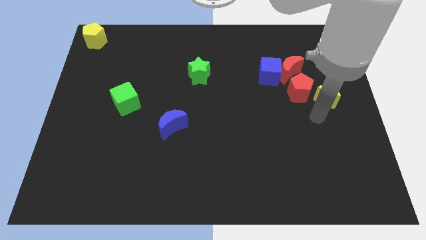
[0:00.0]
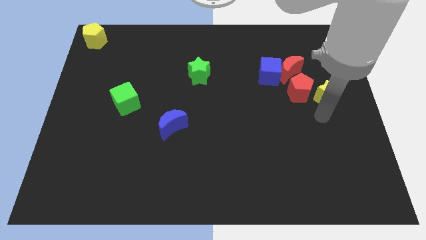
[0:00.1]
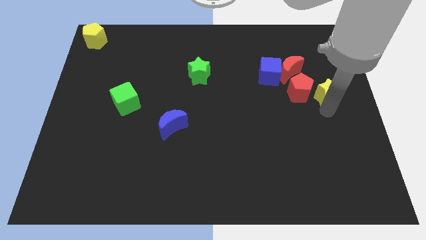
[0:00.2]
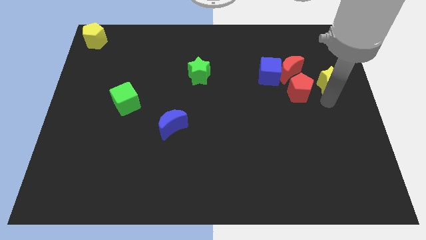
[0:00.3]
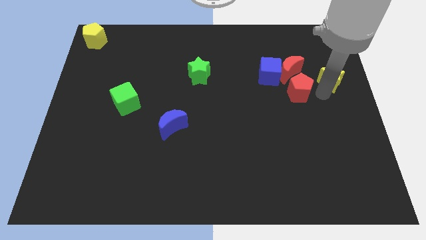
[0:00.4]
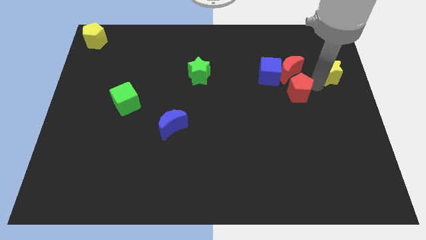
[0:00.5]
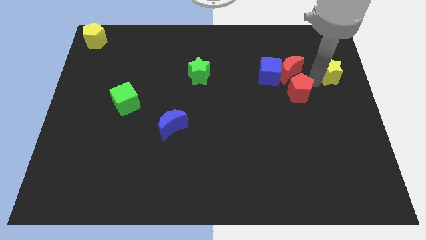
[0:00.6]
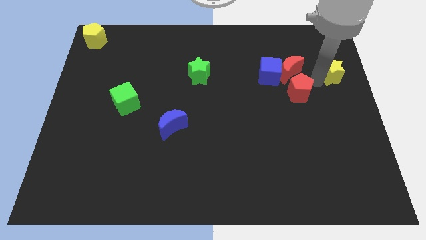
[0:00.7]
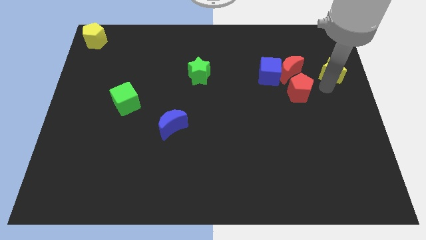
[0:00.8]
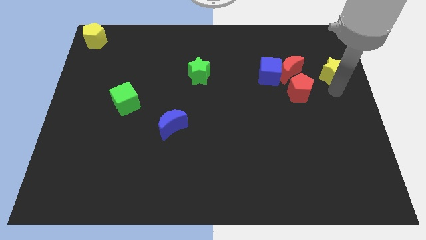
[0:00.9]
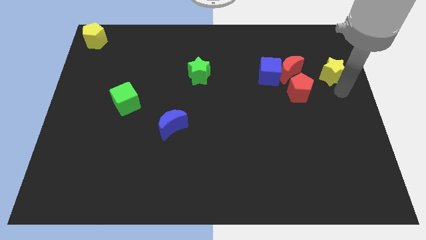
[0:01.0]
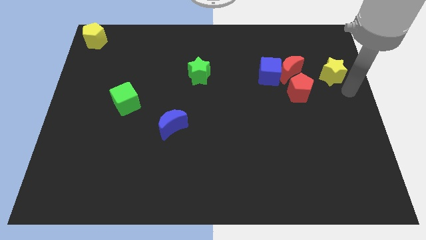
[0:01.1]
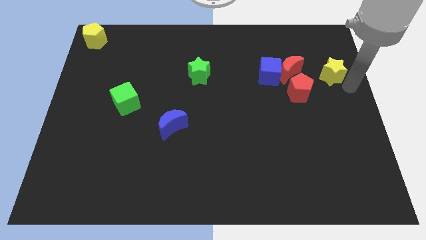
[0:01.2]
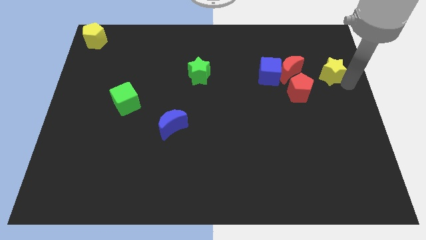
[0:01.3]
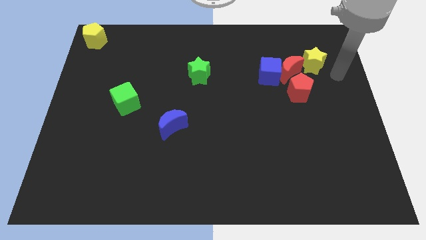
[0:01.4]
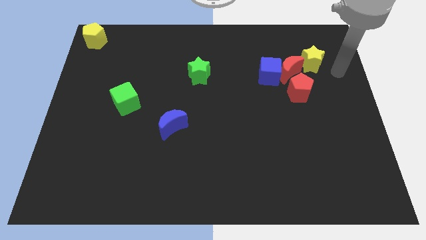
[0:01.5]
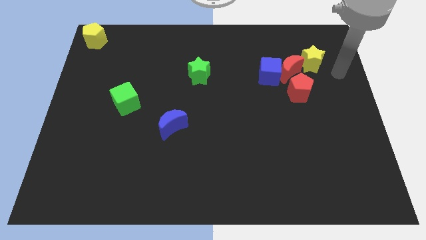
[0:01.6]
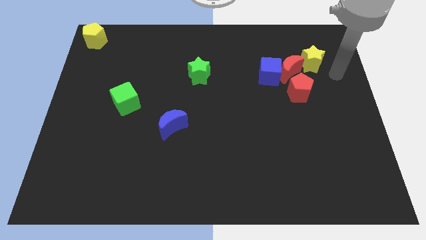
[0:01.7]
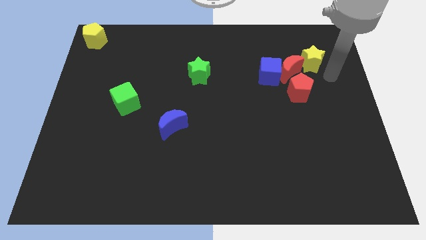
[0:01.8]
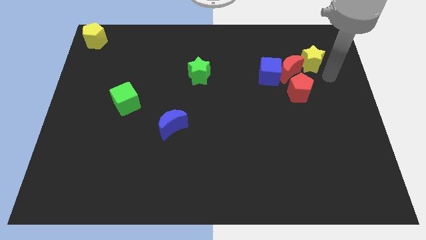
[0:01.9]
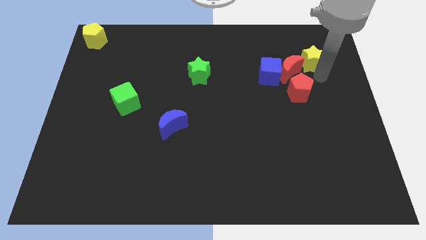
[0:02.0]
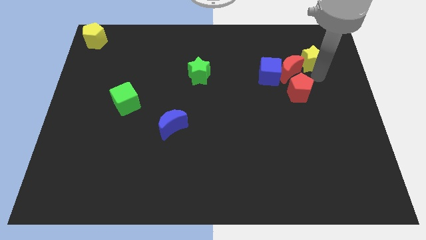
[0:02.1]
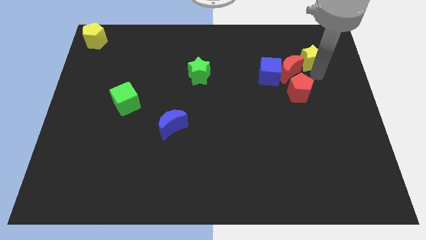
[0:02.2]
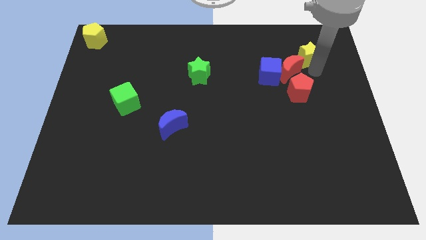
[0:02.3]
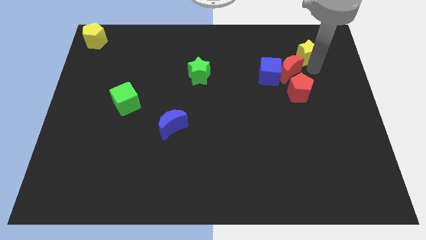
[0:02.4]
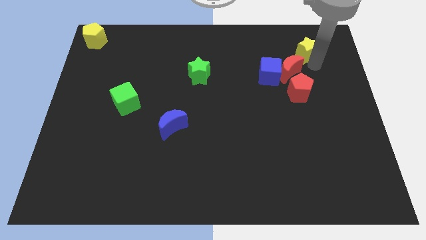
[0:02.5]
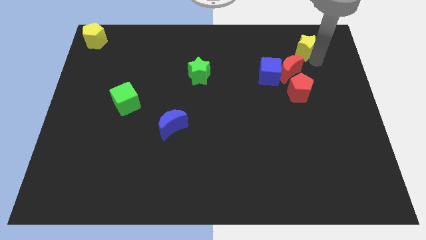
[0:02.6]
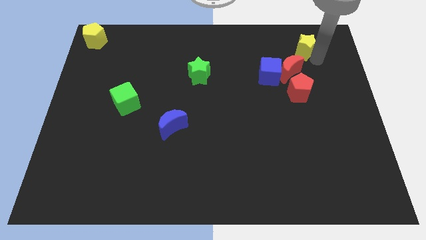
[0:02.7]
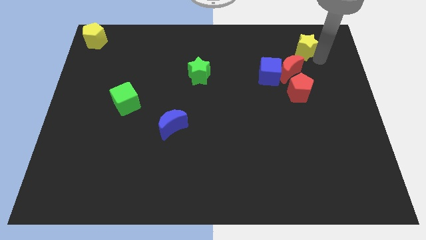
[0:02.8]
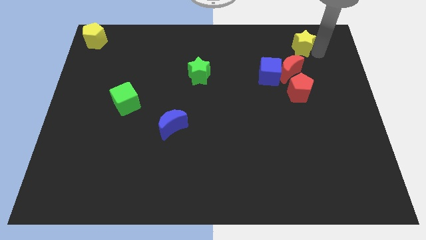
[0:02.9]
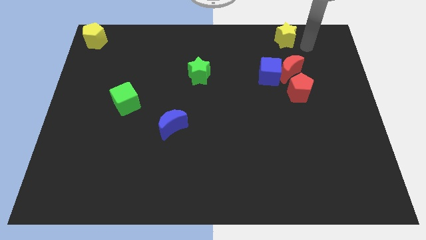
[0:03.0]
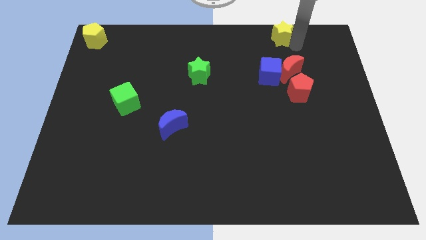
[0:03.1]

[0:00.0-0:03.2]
place the yellow star above the red moon

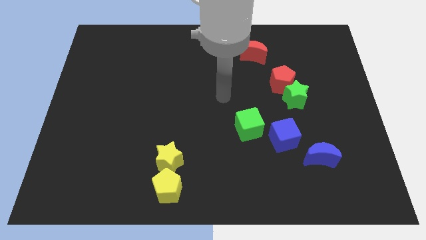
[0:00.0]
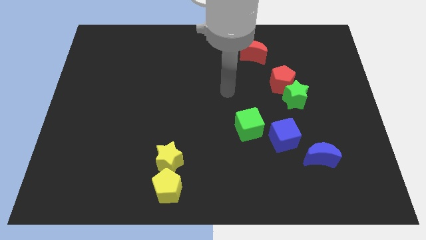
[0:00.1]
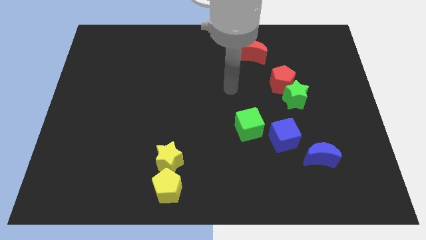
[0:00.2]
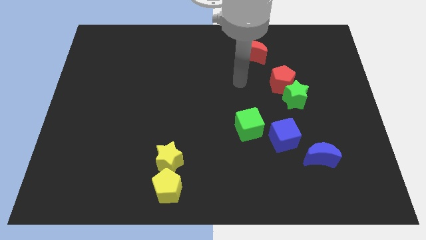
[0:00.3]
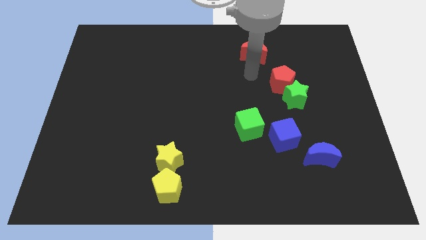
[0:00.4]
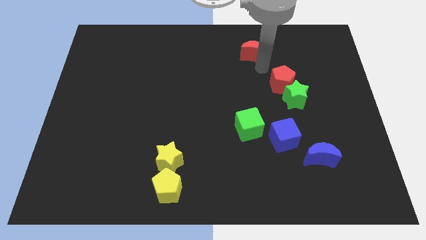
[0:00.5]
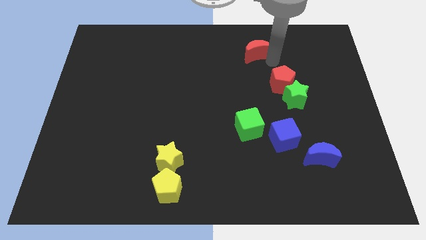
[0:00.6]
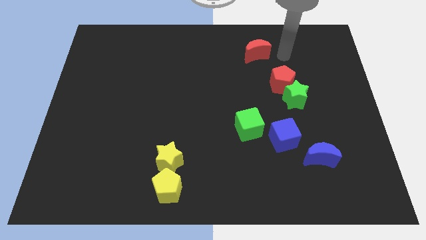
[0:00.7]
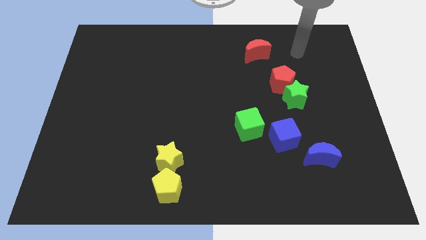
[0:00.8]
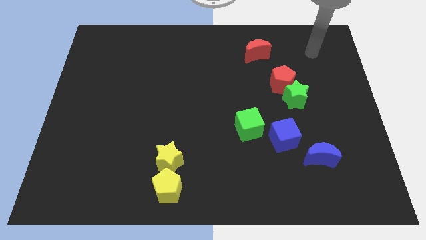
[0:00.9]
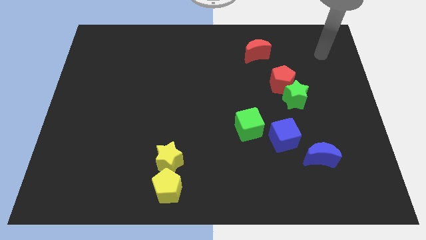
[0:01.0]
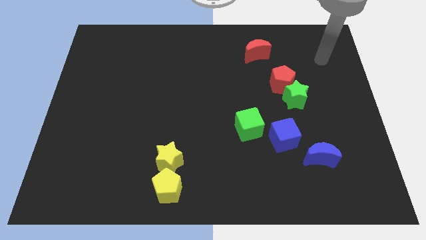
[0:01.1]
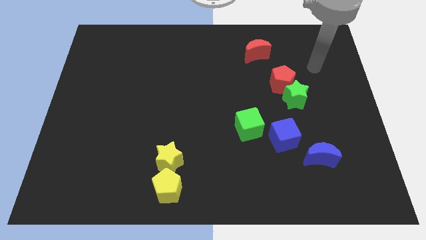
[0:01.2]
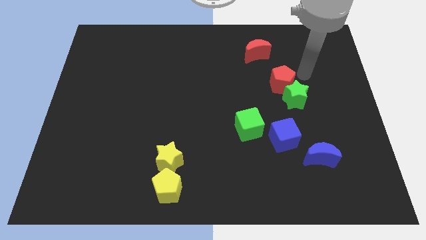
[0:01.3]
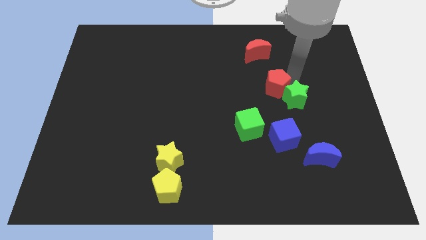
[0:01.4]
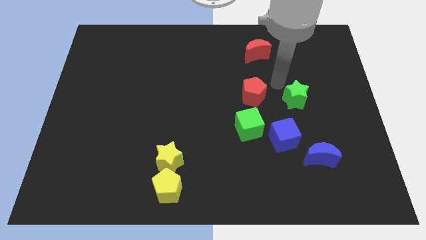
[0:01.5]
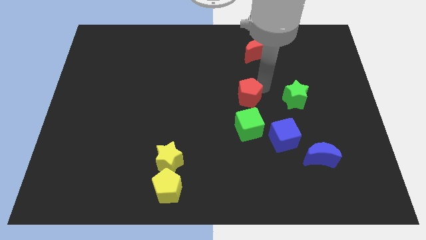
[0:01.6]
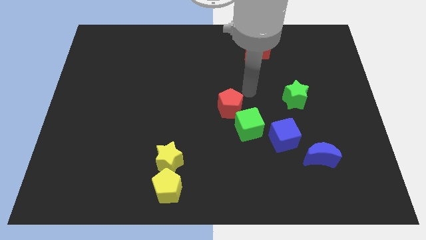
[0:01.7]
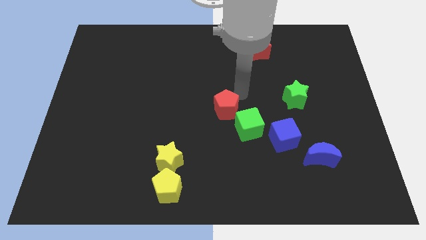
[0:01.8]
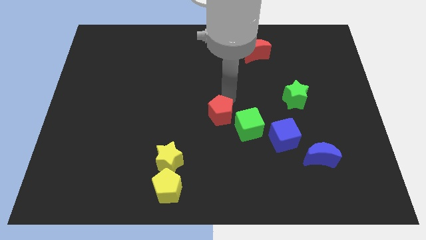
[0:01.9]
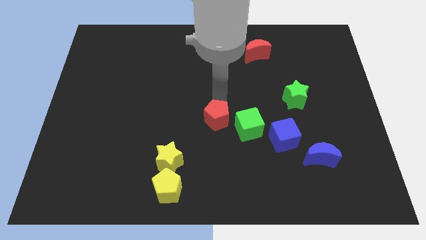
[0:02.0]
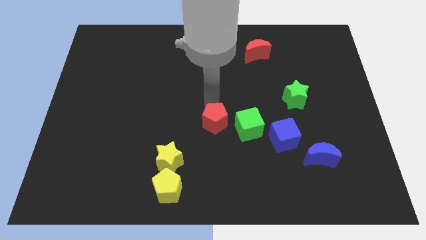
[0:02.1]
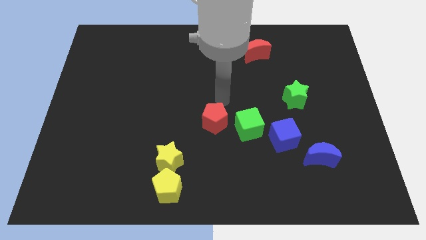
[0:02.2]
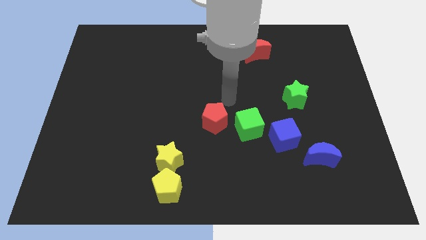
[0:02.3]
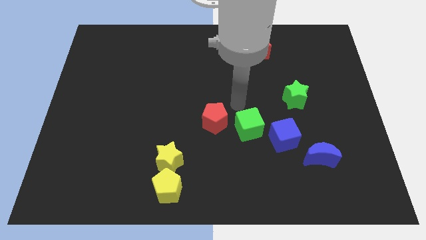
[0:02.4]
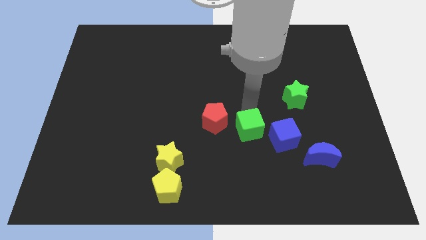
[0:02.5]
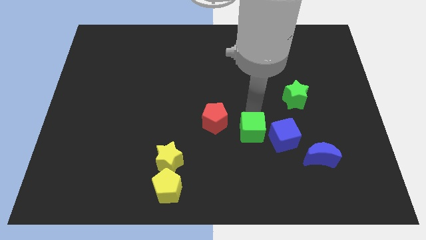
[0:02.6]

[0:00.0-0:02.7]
separate the red pentagon from the green star

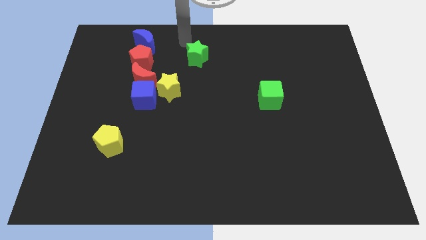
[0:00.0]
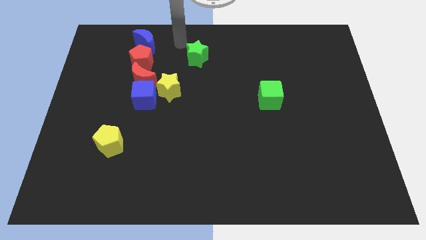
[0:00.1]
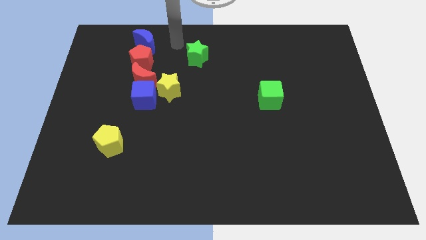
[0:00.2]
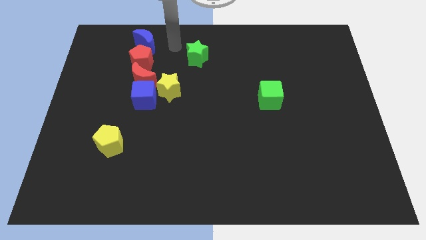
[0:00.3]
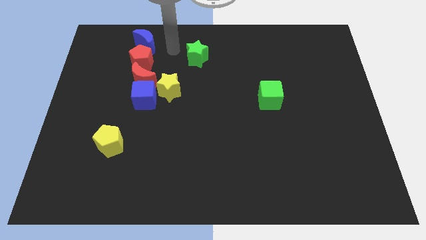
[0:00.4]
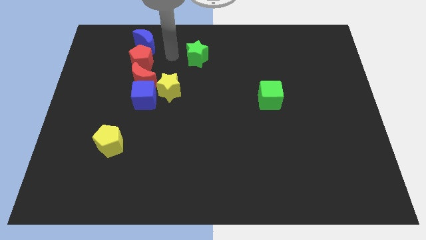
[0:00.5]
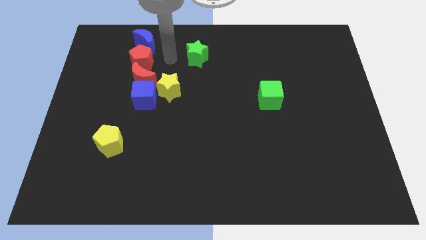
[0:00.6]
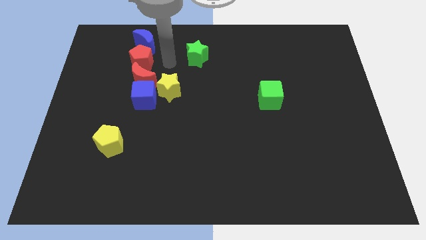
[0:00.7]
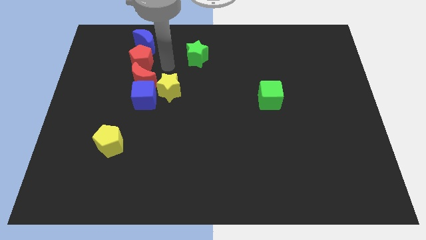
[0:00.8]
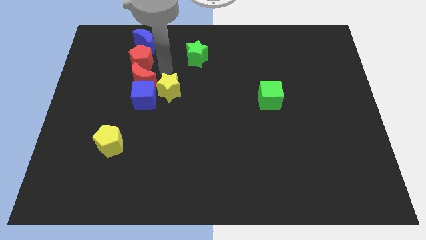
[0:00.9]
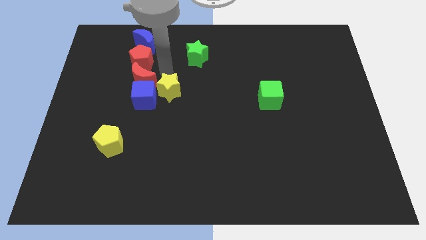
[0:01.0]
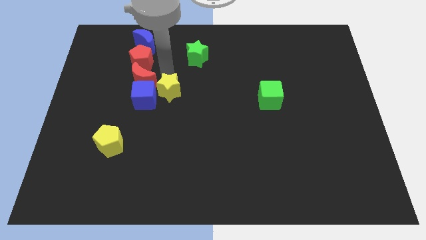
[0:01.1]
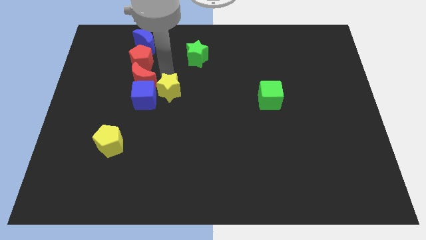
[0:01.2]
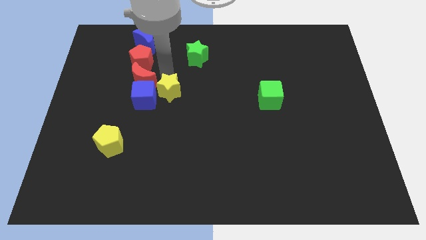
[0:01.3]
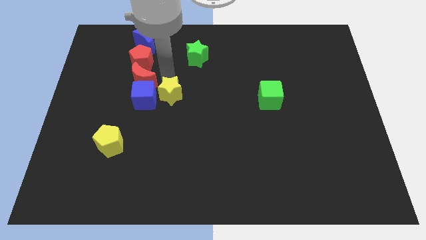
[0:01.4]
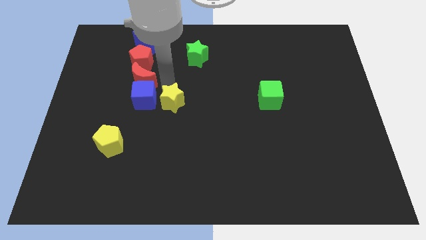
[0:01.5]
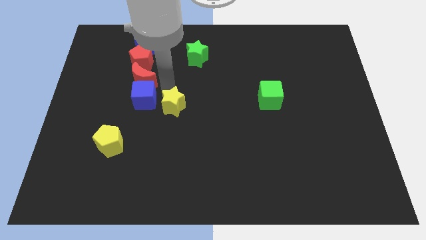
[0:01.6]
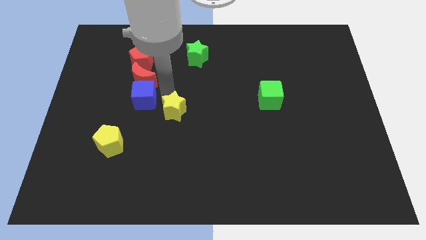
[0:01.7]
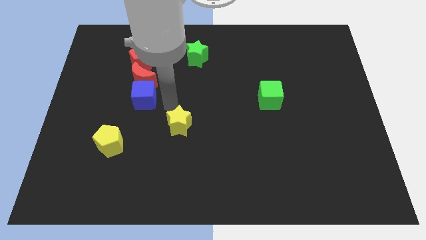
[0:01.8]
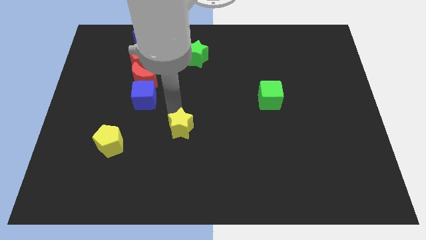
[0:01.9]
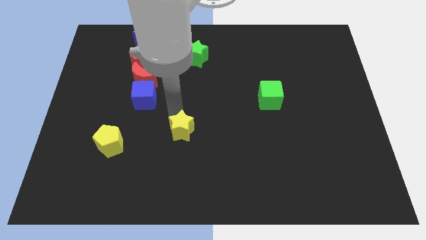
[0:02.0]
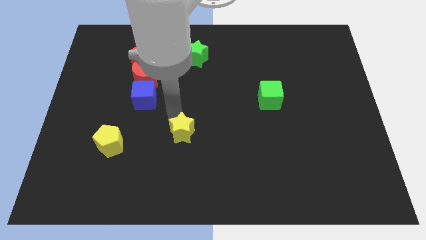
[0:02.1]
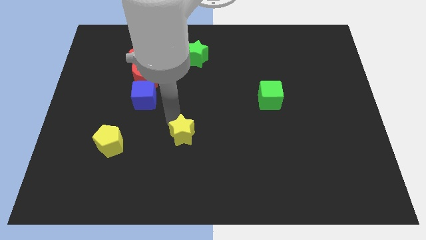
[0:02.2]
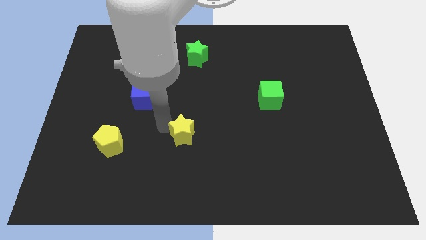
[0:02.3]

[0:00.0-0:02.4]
move the yellow star towards the bottom

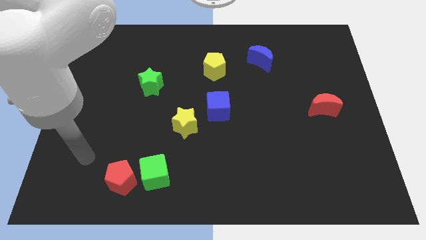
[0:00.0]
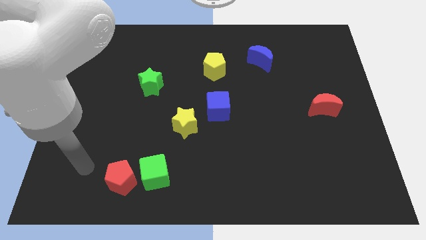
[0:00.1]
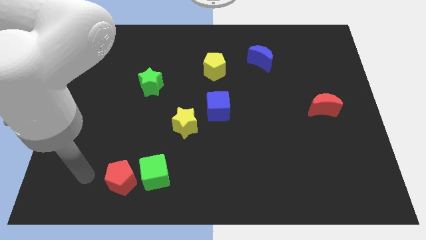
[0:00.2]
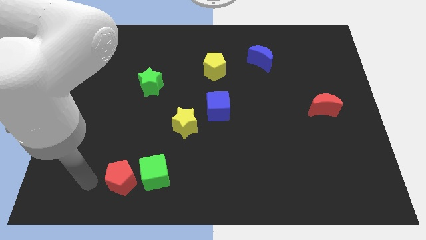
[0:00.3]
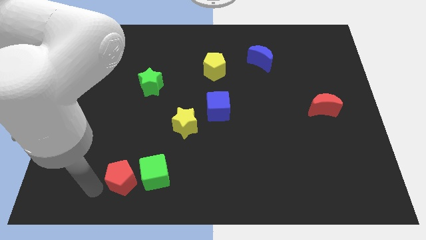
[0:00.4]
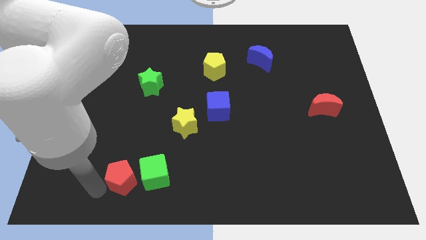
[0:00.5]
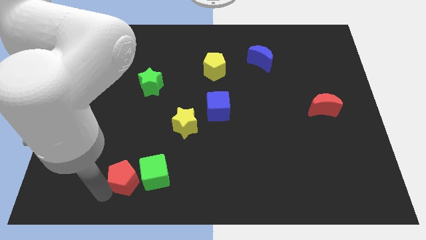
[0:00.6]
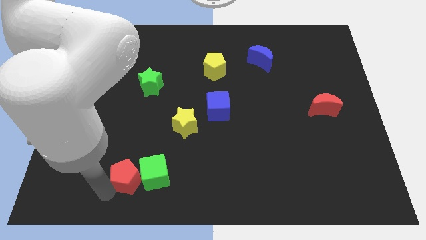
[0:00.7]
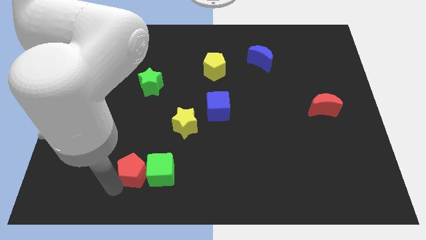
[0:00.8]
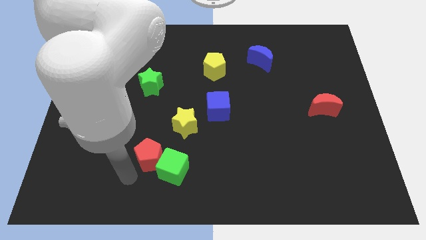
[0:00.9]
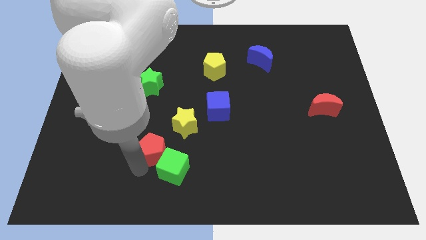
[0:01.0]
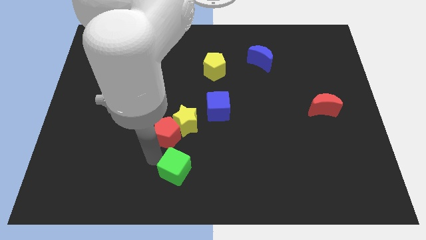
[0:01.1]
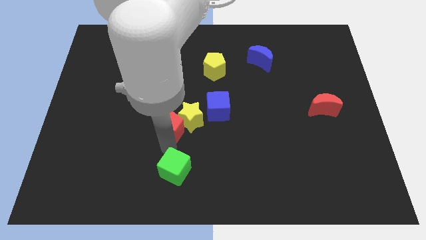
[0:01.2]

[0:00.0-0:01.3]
move the red pentagon to the top of the green cube
